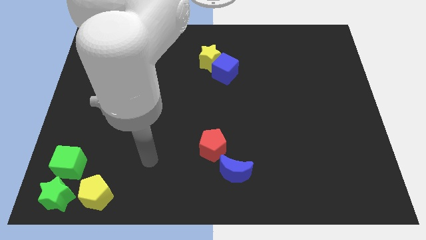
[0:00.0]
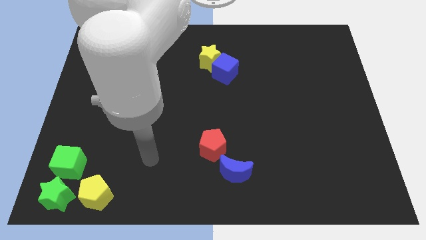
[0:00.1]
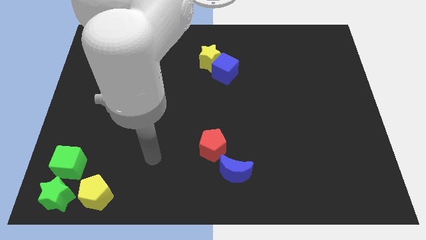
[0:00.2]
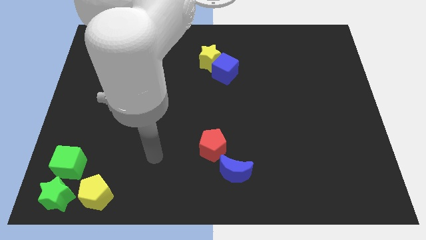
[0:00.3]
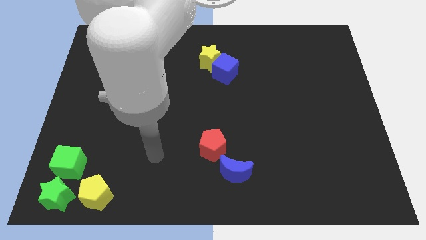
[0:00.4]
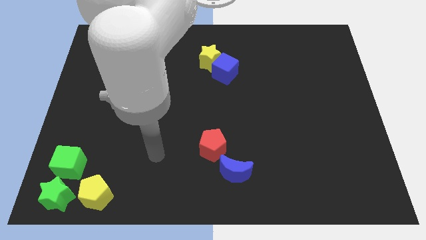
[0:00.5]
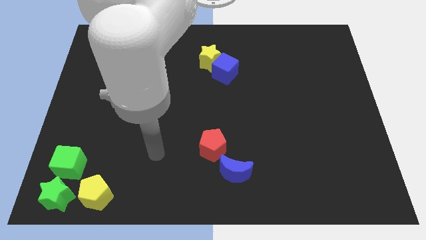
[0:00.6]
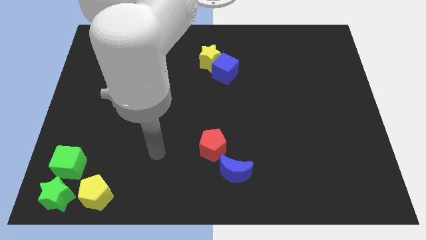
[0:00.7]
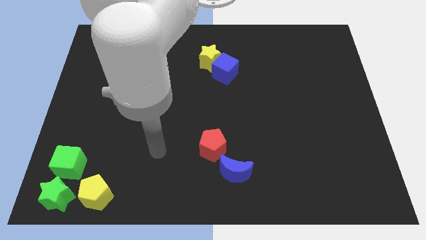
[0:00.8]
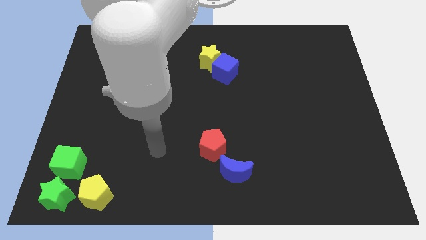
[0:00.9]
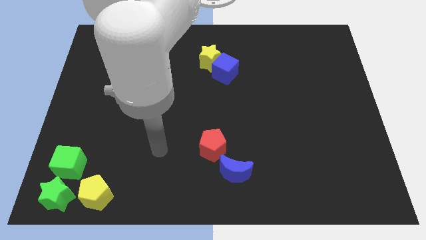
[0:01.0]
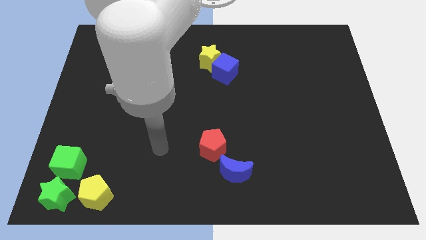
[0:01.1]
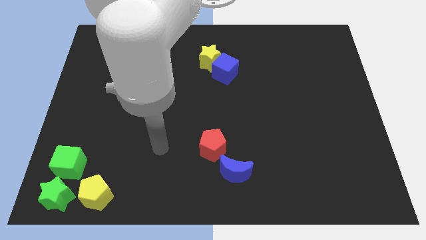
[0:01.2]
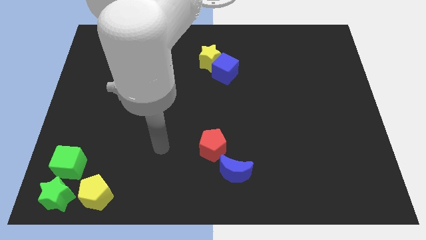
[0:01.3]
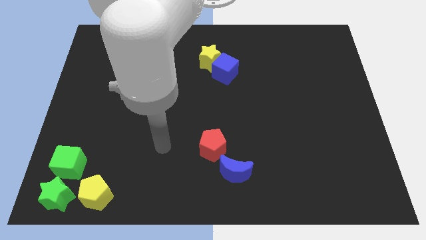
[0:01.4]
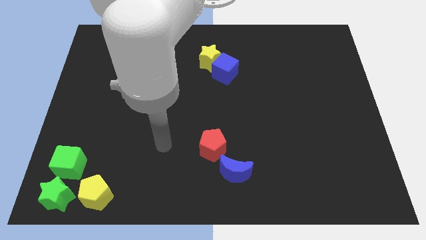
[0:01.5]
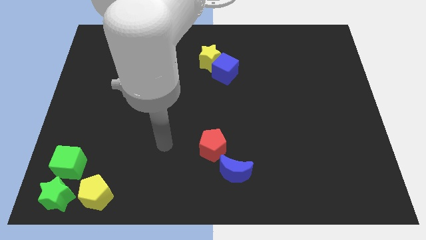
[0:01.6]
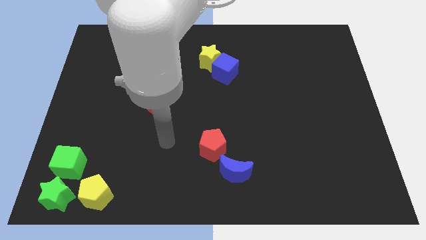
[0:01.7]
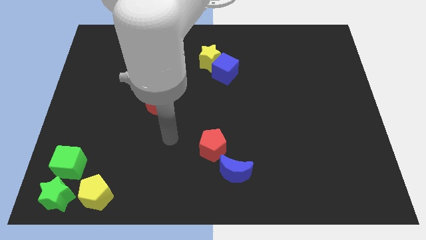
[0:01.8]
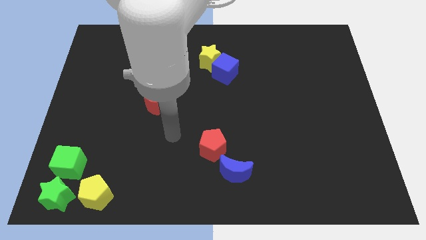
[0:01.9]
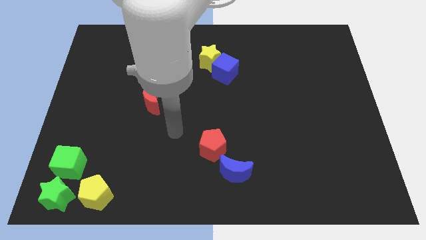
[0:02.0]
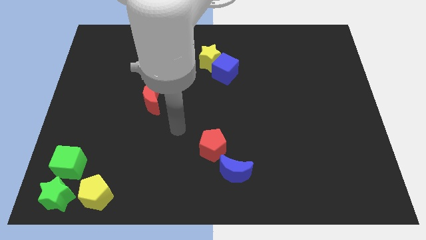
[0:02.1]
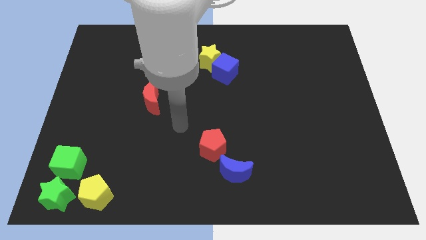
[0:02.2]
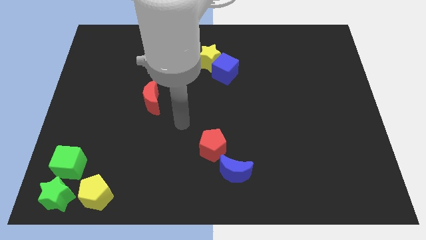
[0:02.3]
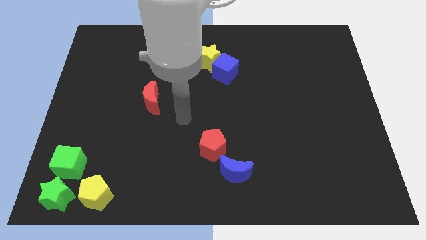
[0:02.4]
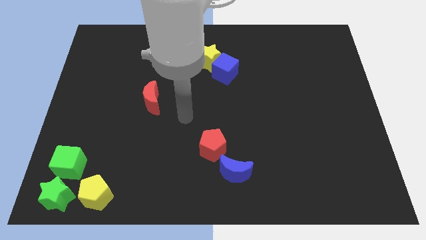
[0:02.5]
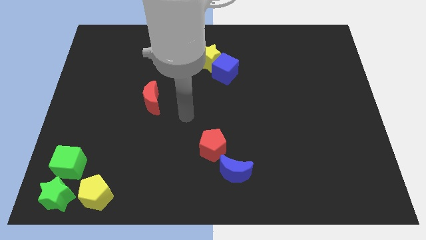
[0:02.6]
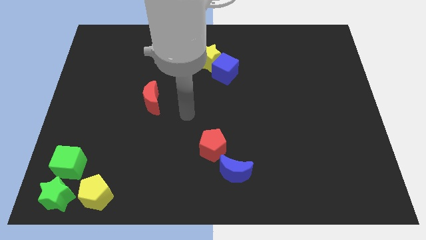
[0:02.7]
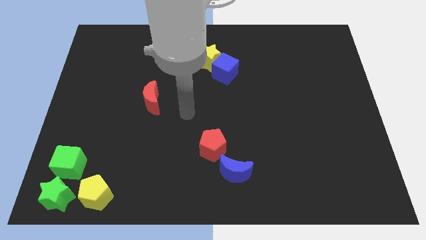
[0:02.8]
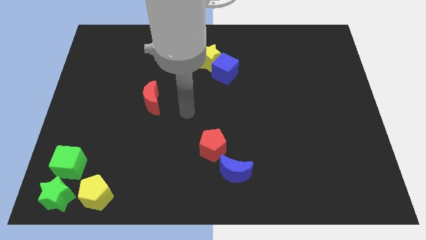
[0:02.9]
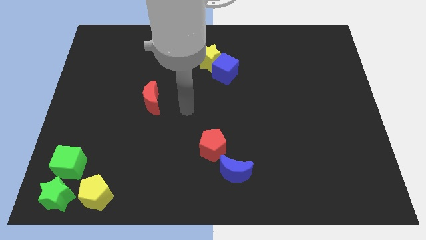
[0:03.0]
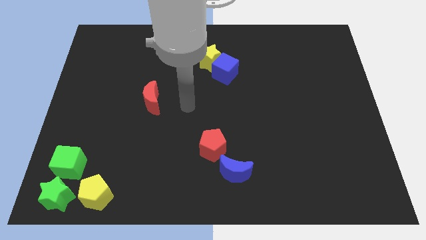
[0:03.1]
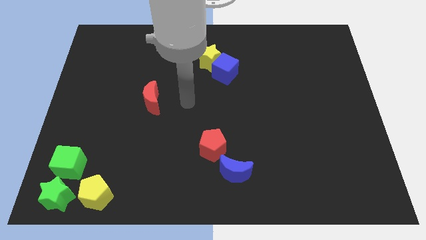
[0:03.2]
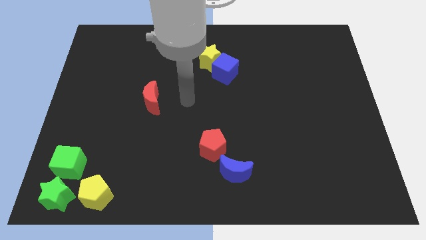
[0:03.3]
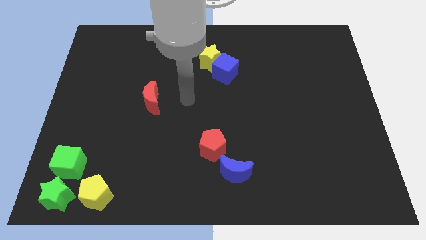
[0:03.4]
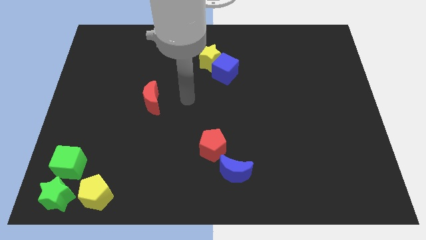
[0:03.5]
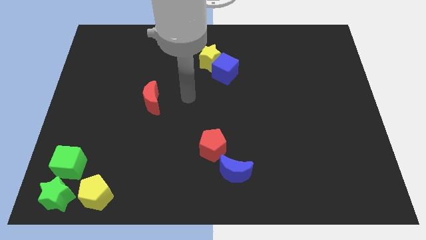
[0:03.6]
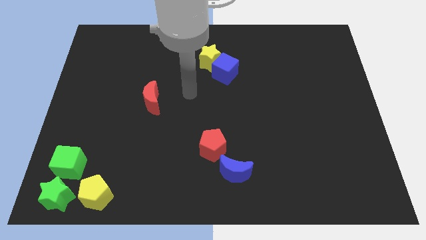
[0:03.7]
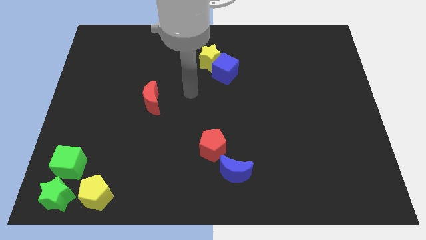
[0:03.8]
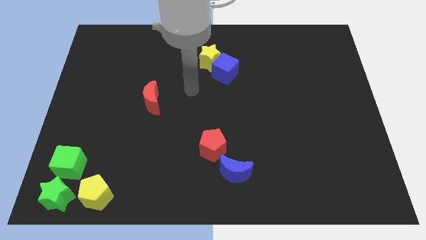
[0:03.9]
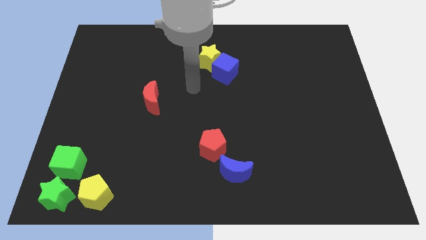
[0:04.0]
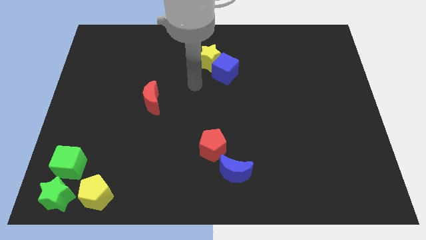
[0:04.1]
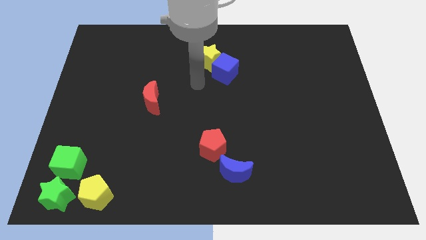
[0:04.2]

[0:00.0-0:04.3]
move your arm towards blue cube

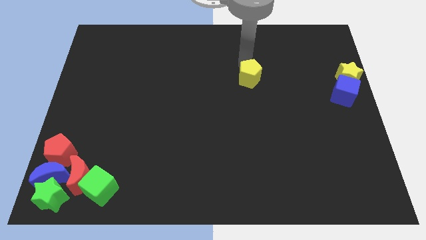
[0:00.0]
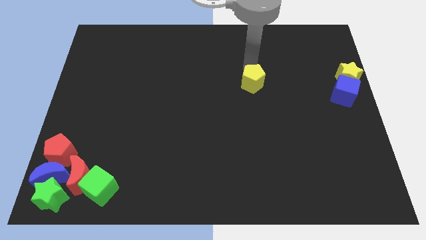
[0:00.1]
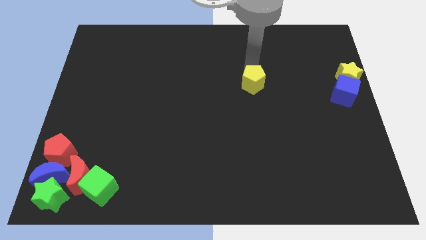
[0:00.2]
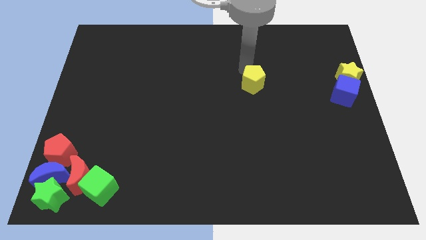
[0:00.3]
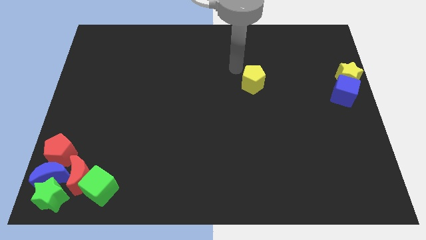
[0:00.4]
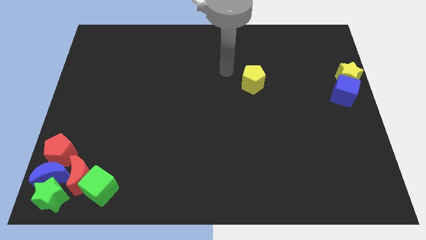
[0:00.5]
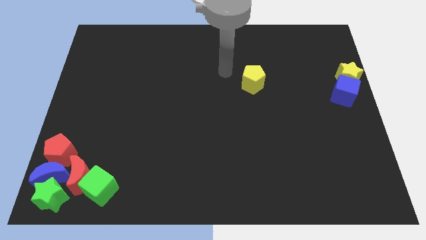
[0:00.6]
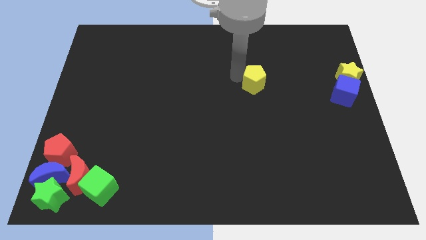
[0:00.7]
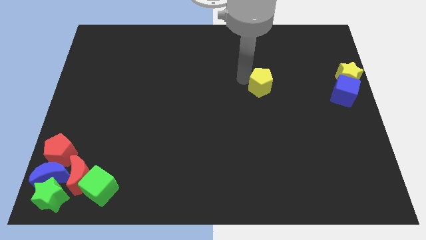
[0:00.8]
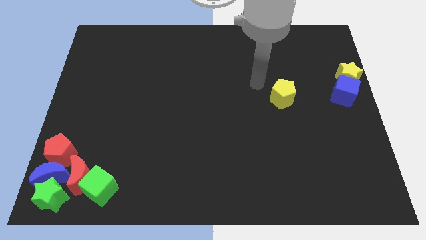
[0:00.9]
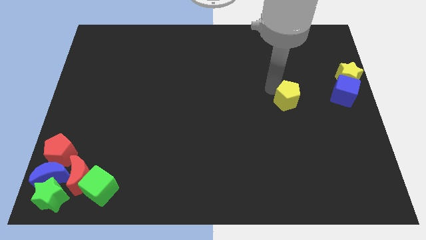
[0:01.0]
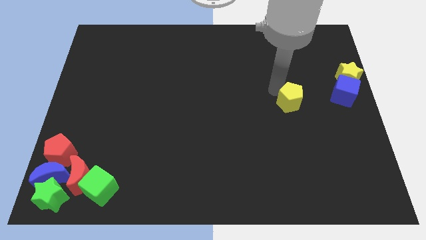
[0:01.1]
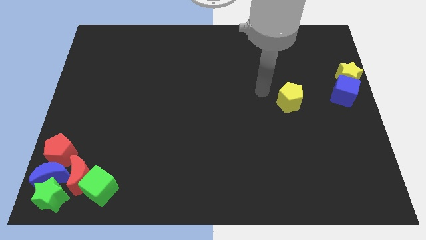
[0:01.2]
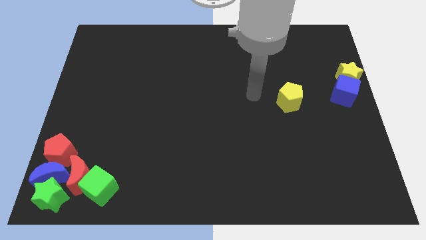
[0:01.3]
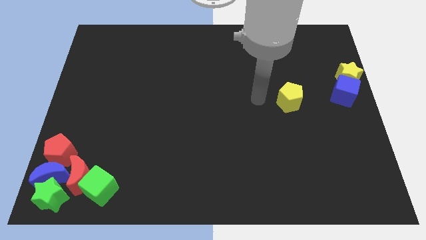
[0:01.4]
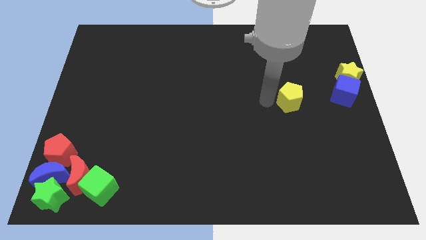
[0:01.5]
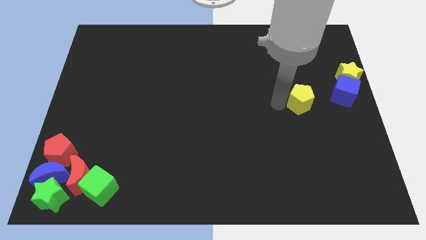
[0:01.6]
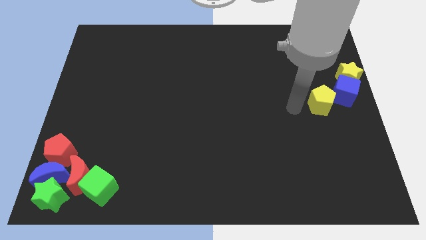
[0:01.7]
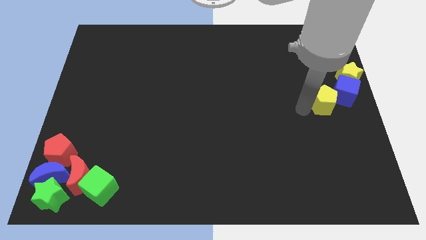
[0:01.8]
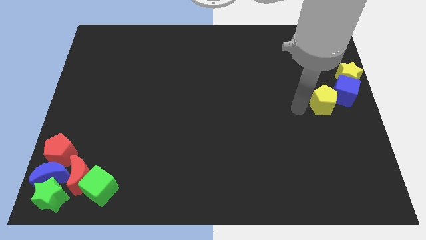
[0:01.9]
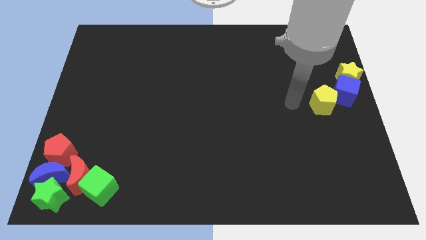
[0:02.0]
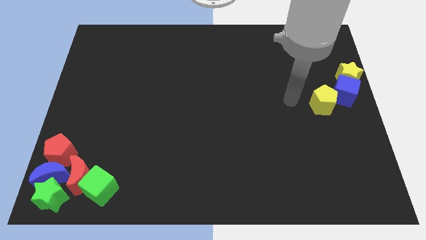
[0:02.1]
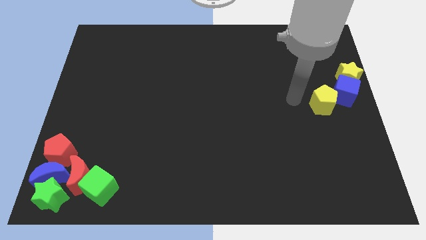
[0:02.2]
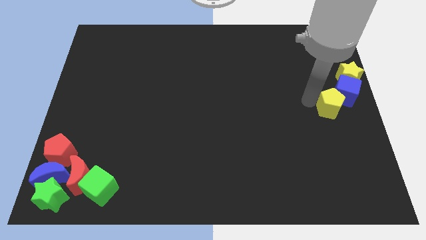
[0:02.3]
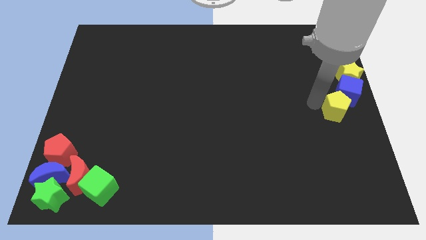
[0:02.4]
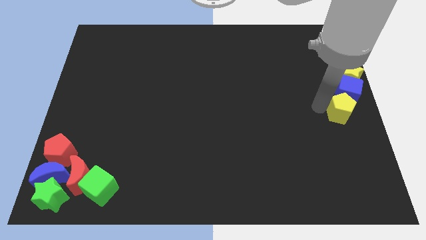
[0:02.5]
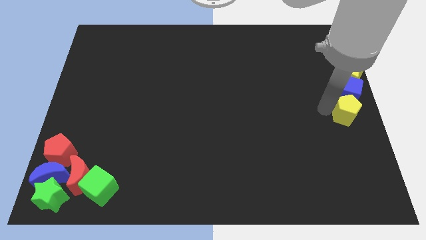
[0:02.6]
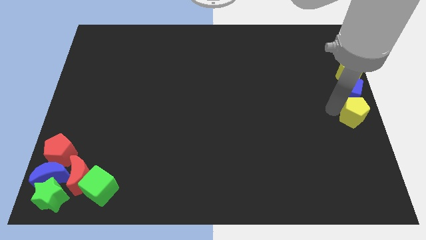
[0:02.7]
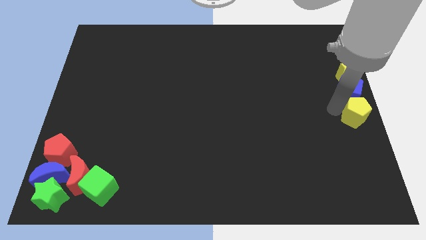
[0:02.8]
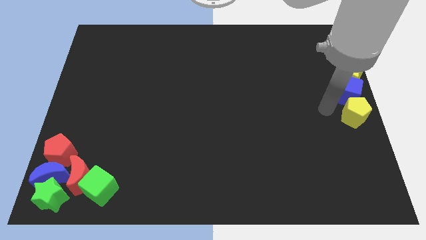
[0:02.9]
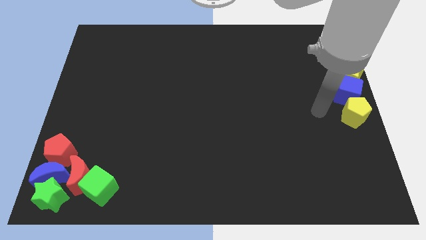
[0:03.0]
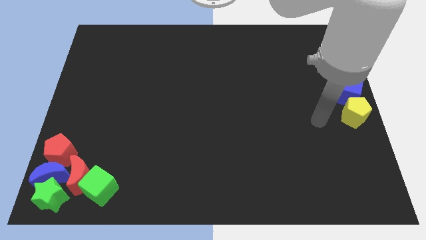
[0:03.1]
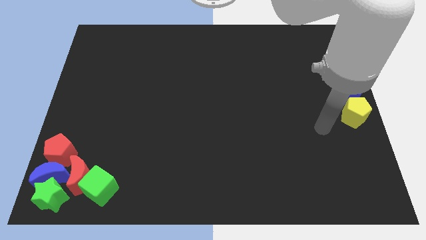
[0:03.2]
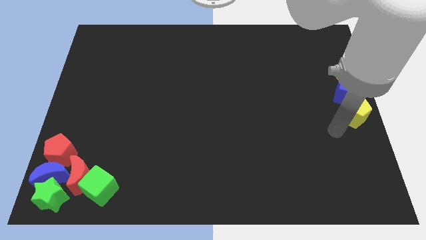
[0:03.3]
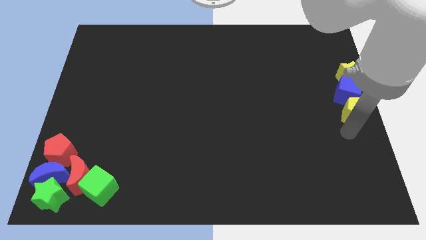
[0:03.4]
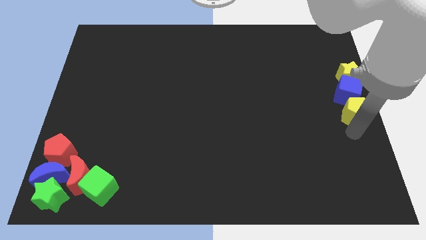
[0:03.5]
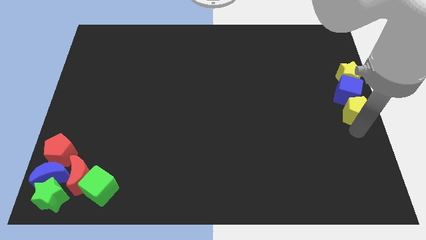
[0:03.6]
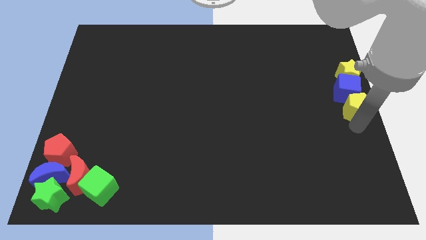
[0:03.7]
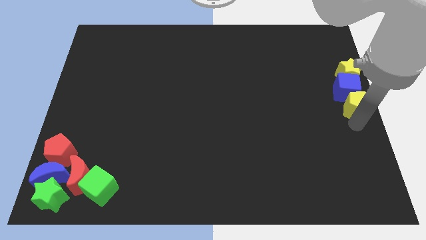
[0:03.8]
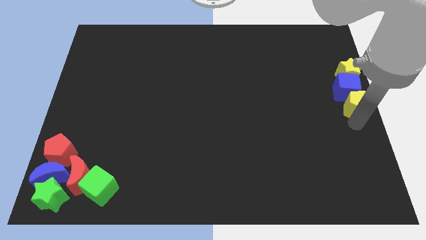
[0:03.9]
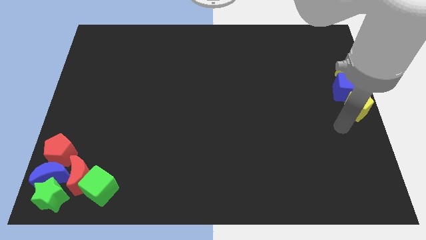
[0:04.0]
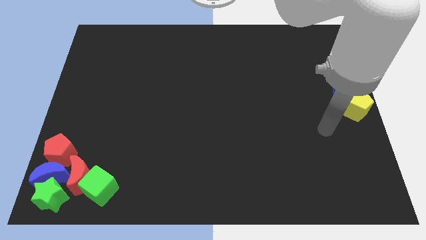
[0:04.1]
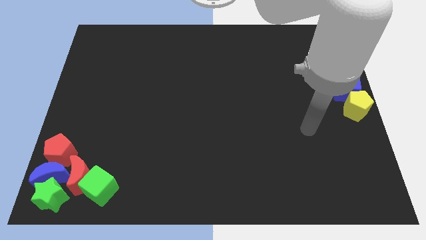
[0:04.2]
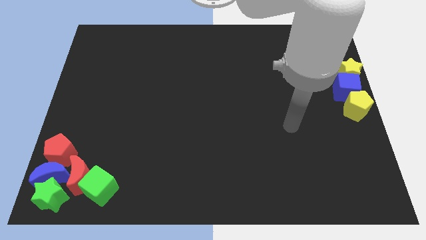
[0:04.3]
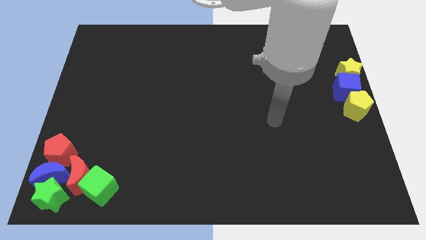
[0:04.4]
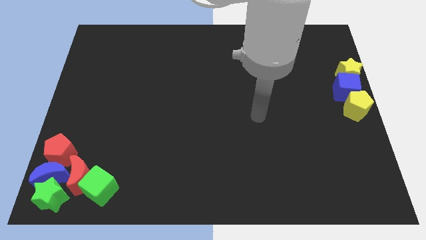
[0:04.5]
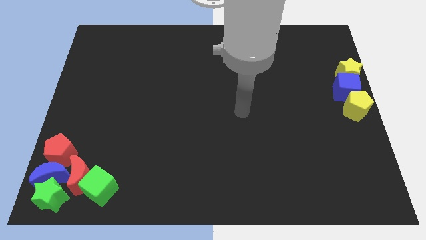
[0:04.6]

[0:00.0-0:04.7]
place yellow pentagon below blue cube at the right center of the board
